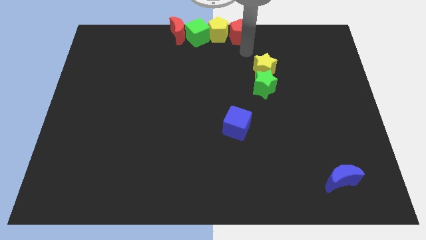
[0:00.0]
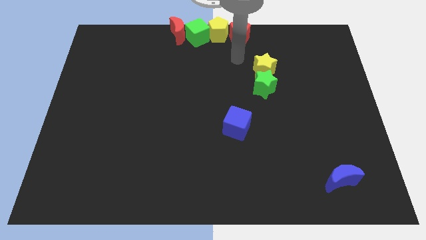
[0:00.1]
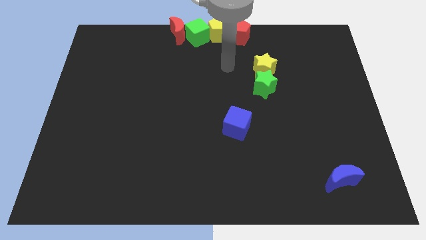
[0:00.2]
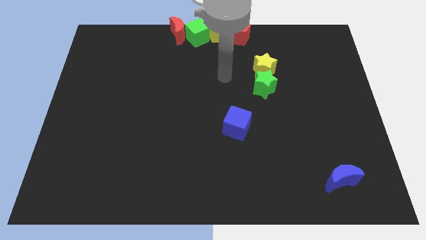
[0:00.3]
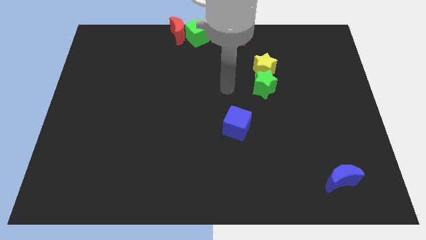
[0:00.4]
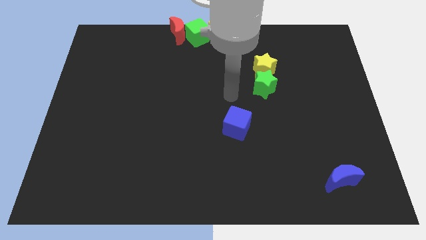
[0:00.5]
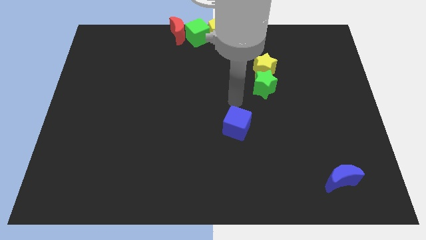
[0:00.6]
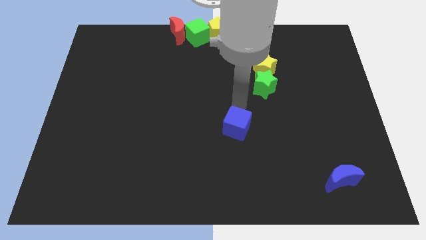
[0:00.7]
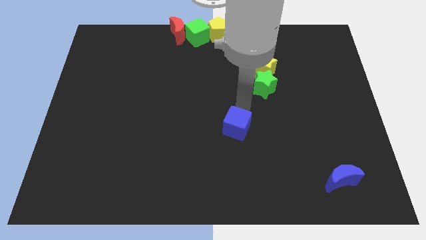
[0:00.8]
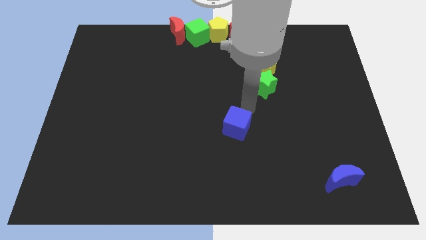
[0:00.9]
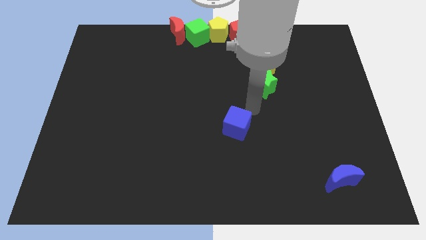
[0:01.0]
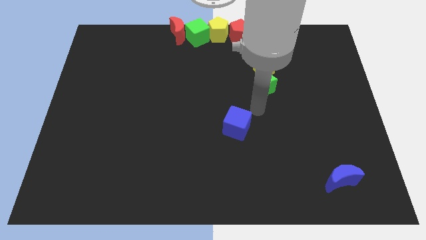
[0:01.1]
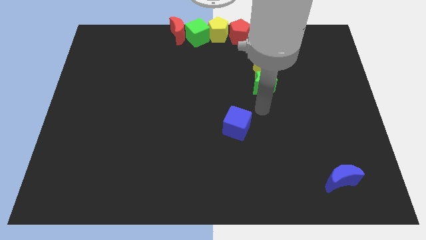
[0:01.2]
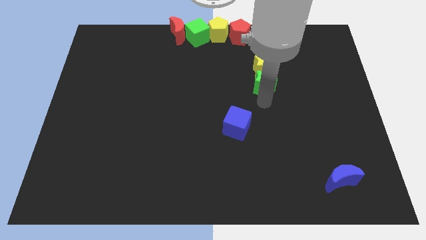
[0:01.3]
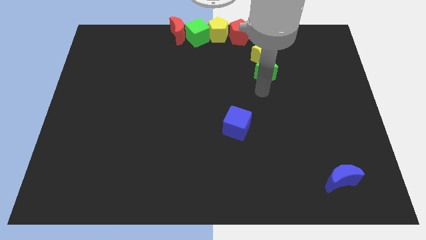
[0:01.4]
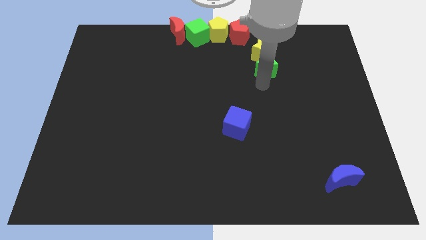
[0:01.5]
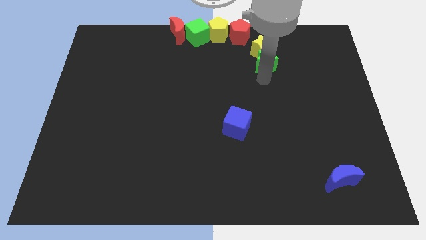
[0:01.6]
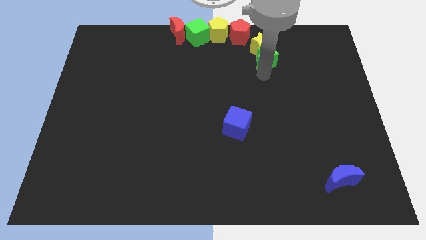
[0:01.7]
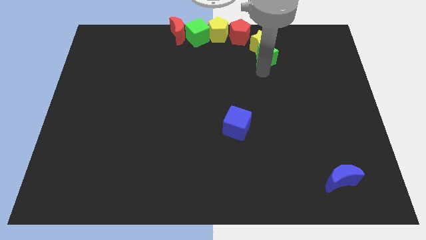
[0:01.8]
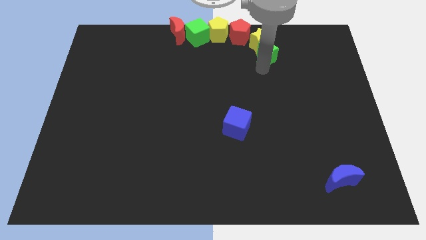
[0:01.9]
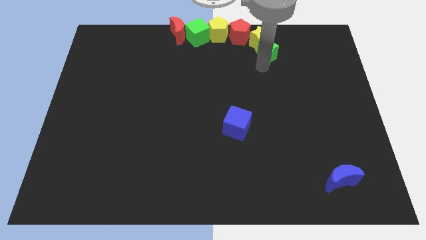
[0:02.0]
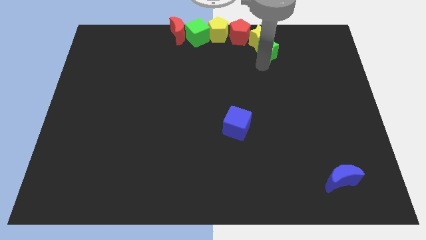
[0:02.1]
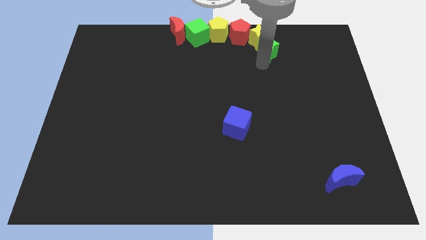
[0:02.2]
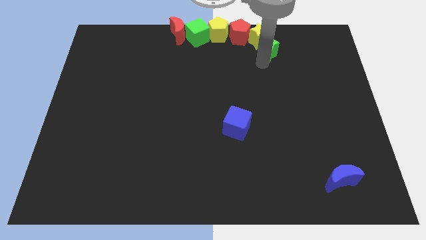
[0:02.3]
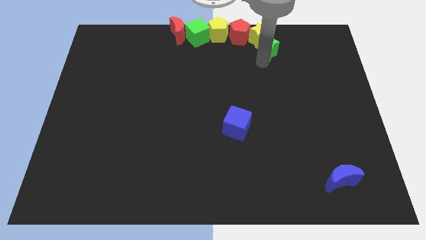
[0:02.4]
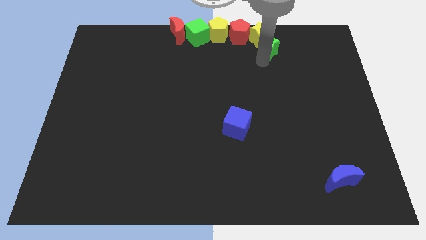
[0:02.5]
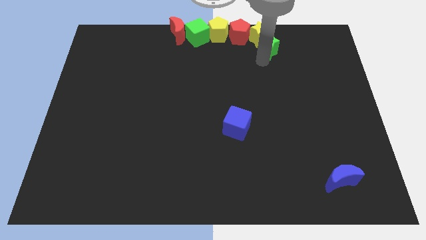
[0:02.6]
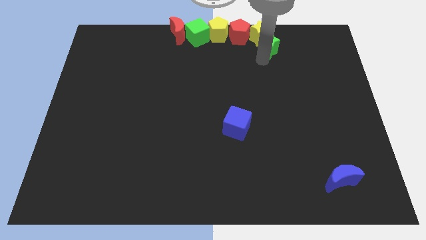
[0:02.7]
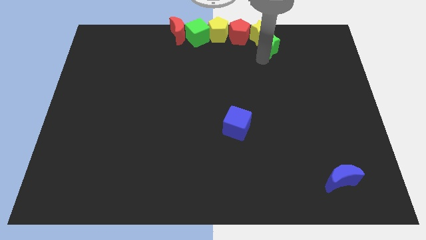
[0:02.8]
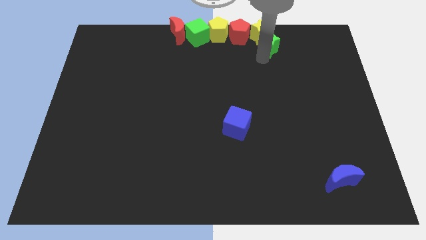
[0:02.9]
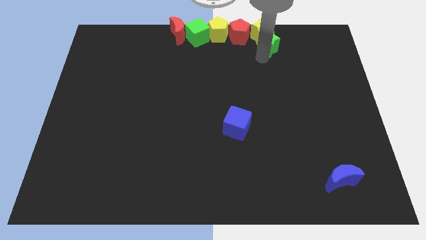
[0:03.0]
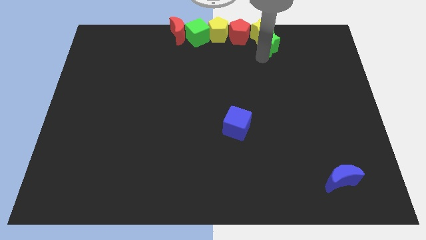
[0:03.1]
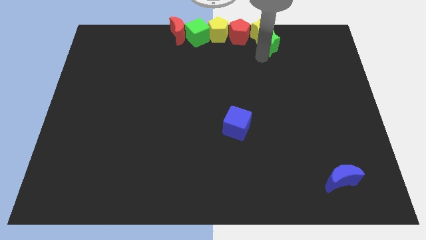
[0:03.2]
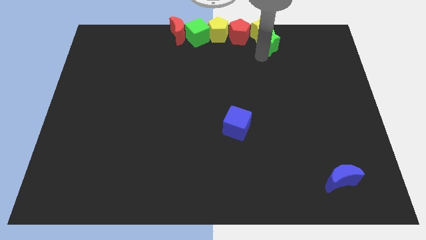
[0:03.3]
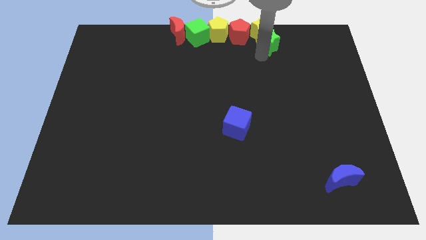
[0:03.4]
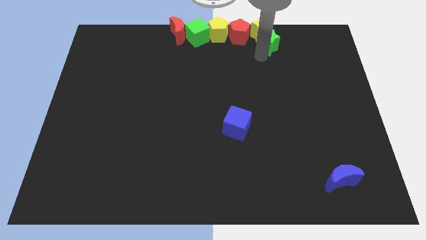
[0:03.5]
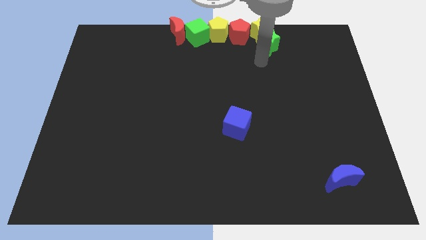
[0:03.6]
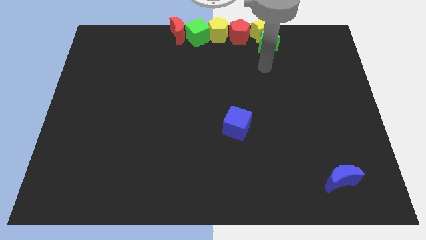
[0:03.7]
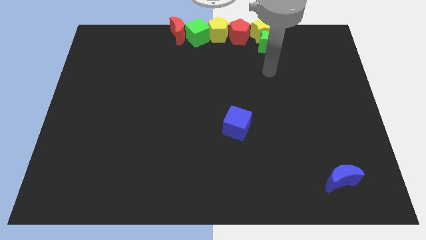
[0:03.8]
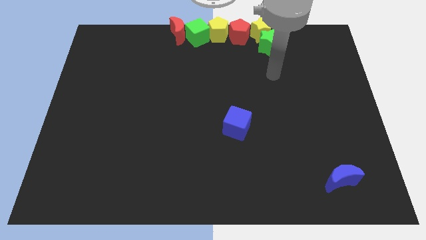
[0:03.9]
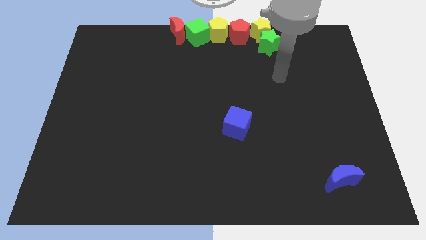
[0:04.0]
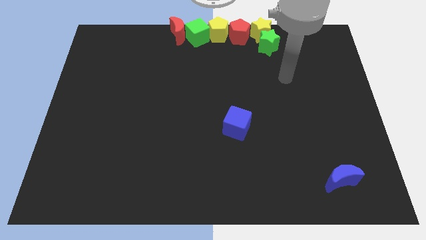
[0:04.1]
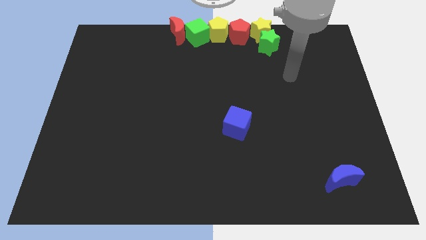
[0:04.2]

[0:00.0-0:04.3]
push the green star along with the yellow star towards the top side of the board

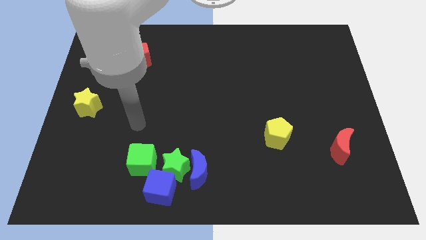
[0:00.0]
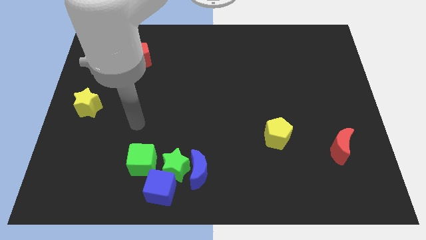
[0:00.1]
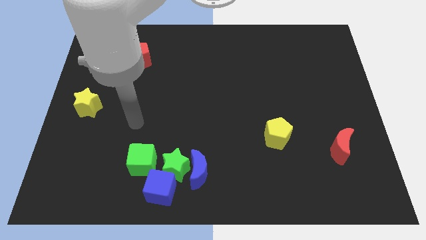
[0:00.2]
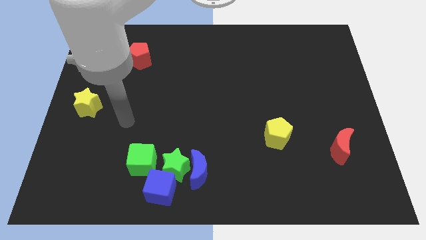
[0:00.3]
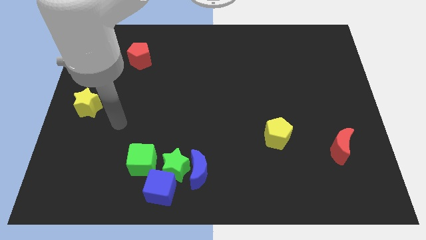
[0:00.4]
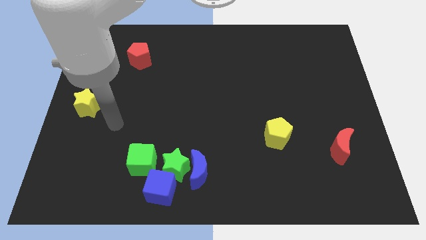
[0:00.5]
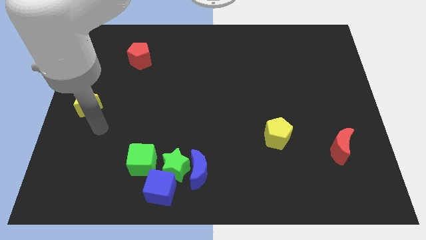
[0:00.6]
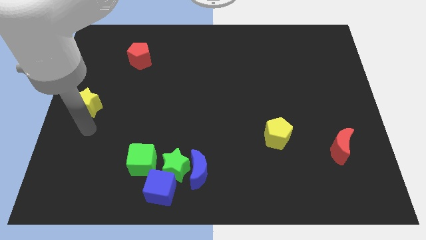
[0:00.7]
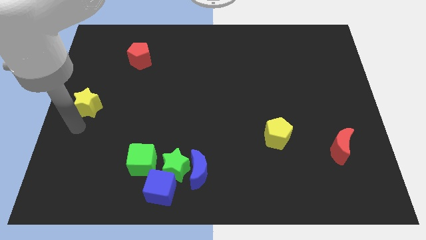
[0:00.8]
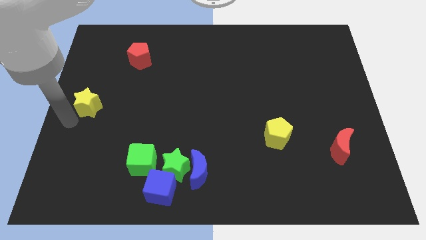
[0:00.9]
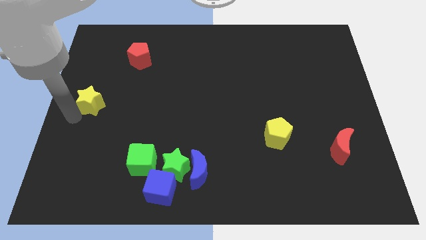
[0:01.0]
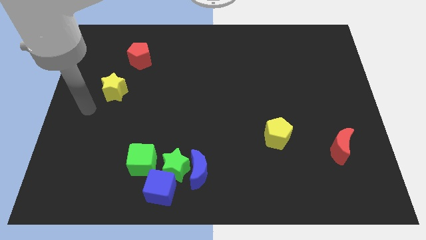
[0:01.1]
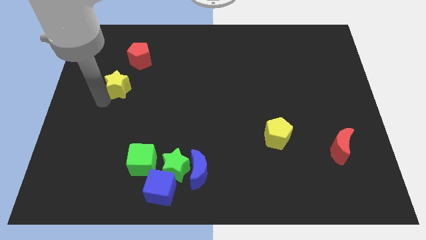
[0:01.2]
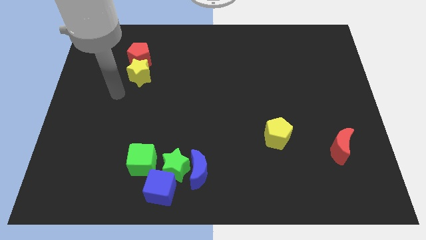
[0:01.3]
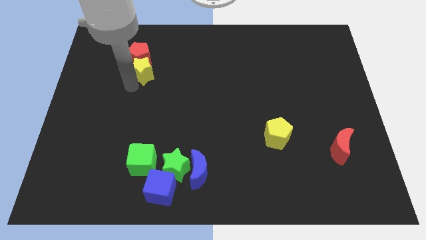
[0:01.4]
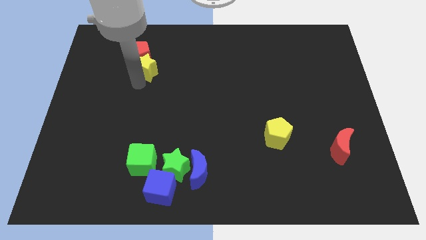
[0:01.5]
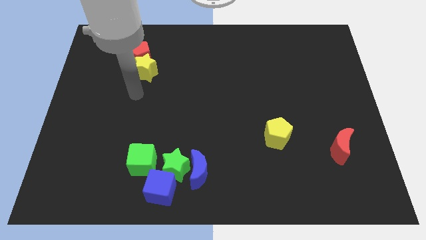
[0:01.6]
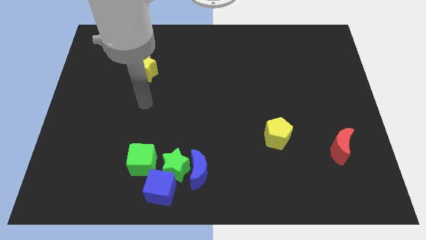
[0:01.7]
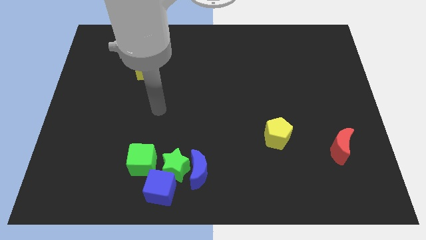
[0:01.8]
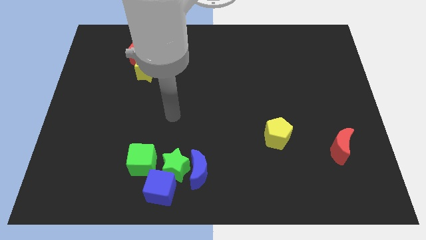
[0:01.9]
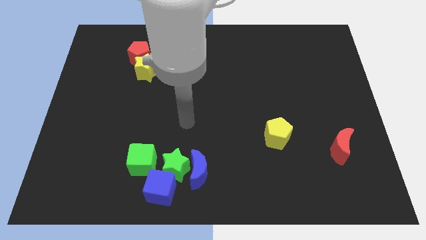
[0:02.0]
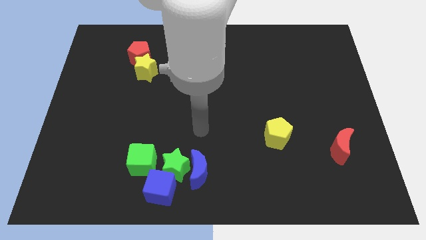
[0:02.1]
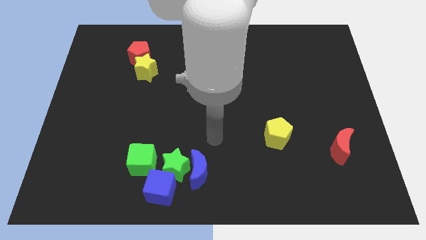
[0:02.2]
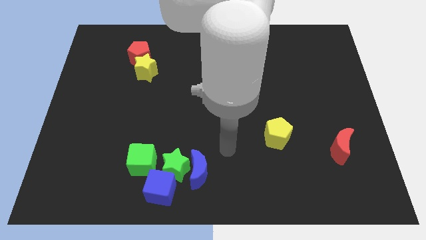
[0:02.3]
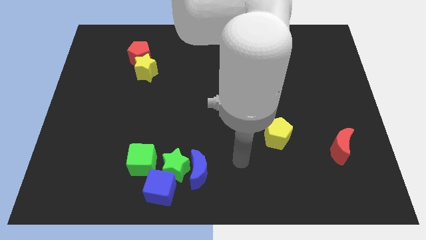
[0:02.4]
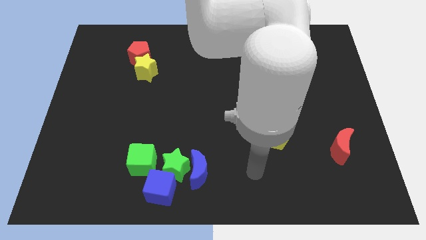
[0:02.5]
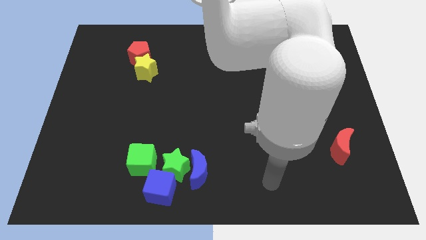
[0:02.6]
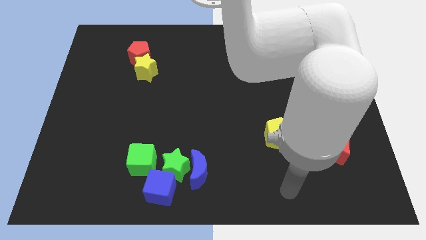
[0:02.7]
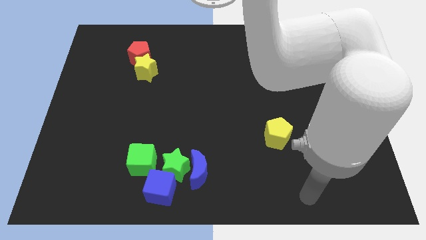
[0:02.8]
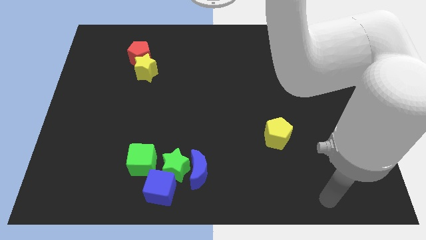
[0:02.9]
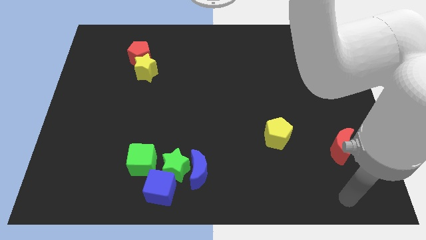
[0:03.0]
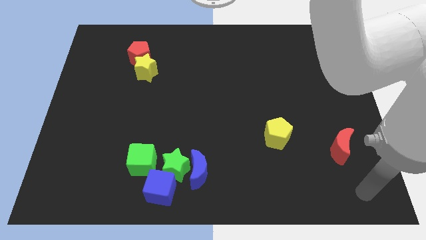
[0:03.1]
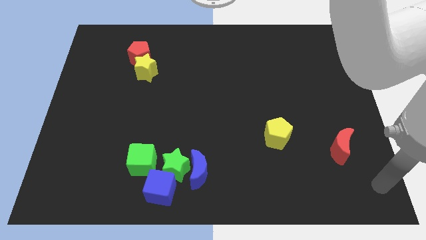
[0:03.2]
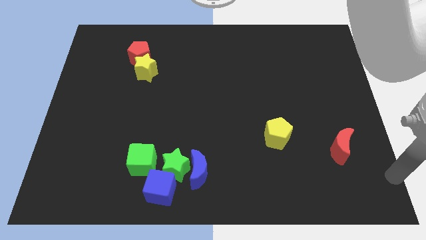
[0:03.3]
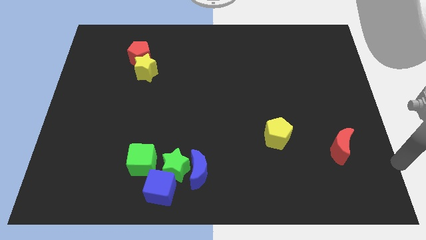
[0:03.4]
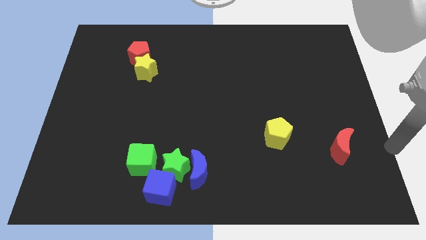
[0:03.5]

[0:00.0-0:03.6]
move your arm to the bottom right of the board

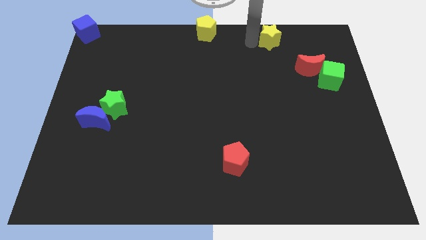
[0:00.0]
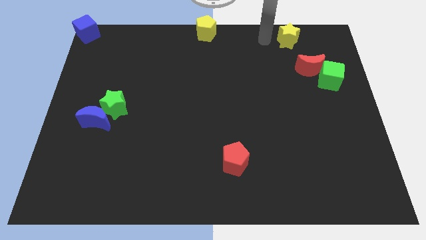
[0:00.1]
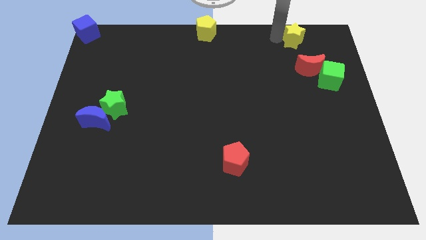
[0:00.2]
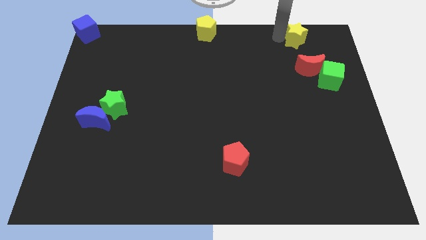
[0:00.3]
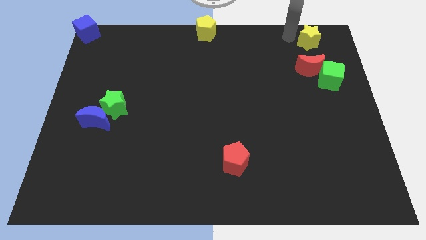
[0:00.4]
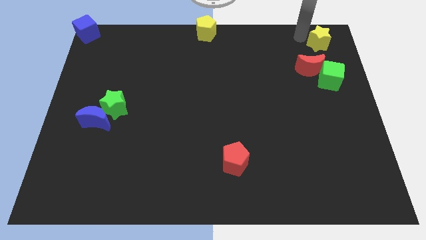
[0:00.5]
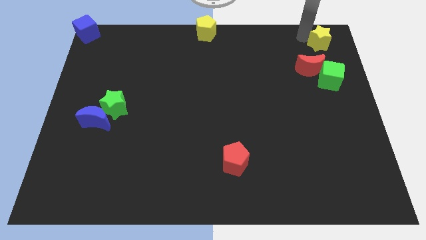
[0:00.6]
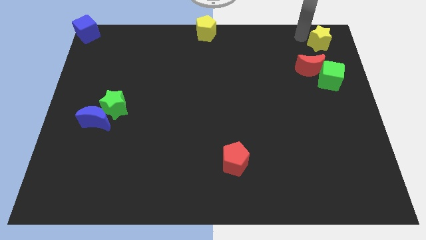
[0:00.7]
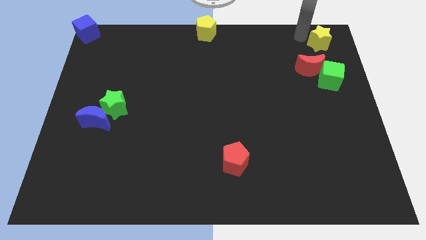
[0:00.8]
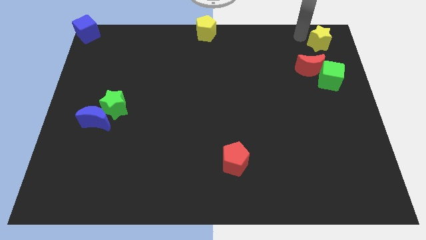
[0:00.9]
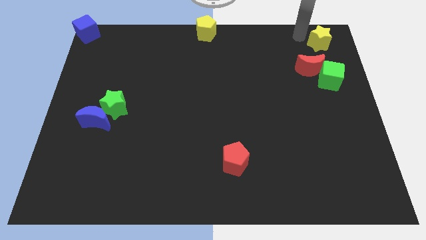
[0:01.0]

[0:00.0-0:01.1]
drag the yellow star near the top right corner
